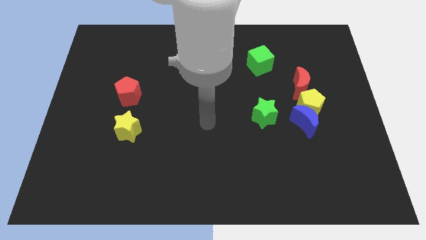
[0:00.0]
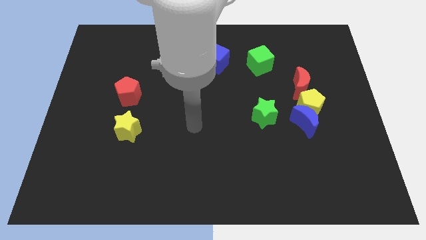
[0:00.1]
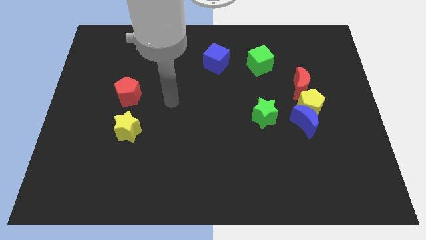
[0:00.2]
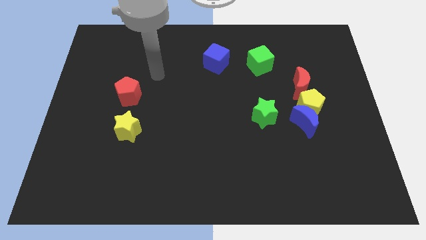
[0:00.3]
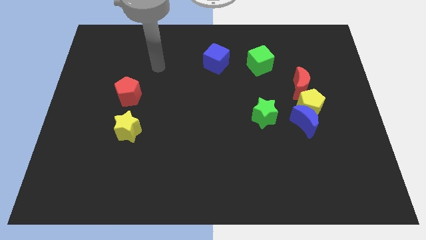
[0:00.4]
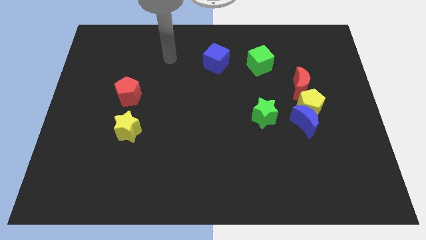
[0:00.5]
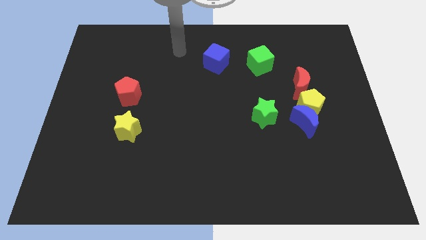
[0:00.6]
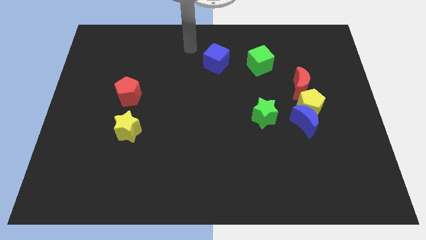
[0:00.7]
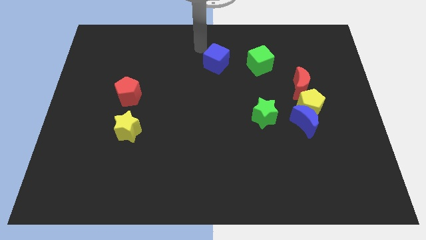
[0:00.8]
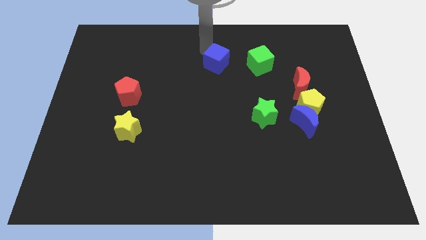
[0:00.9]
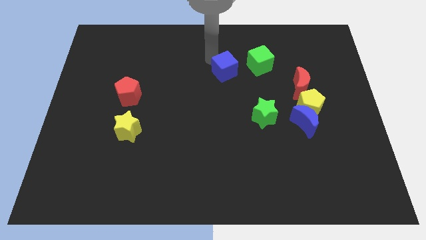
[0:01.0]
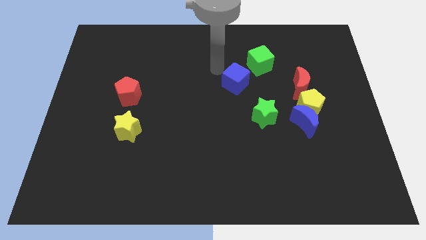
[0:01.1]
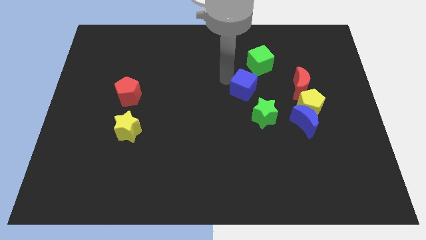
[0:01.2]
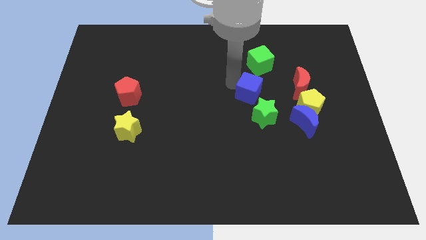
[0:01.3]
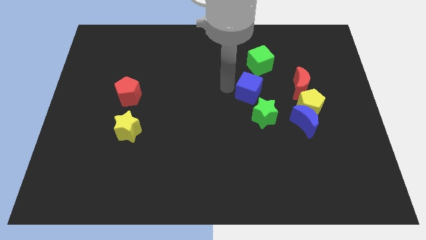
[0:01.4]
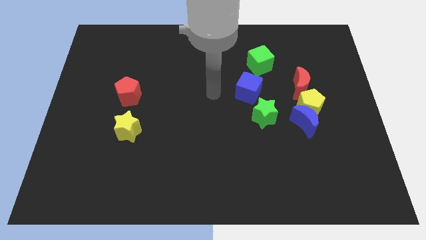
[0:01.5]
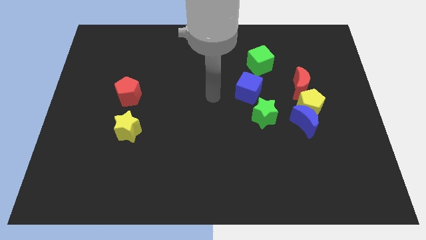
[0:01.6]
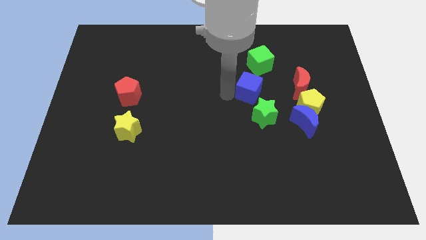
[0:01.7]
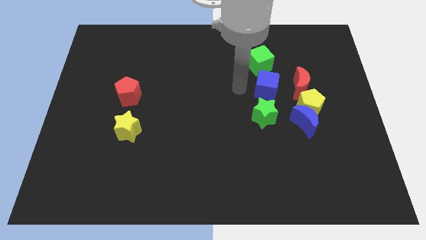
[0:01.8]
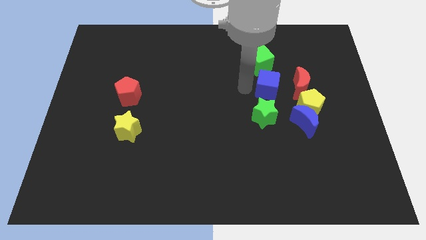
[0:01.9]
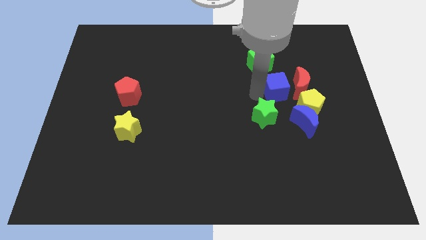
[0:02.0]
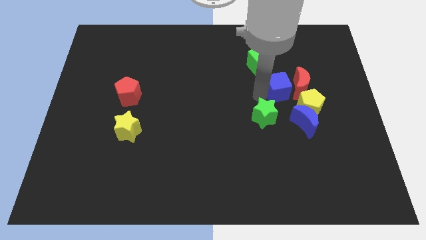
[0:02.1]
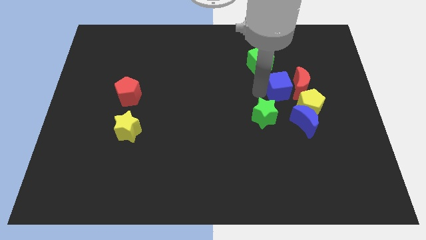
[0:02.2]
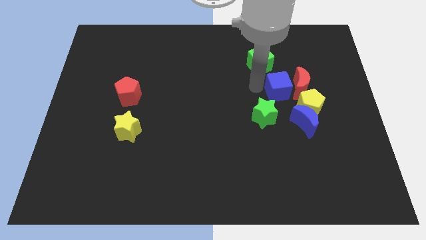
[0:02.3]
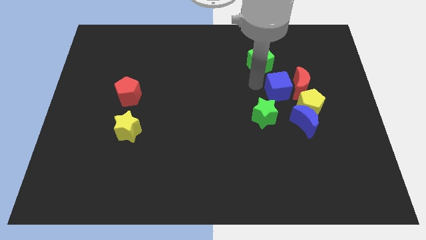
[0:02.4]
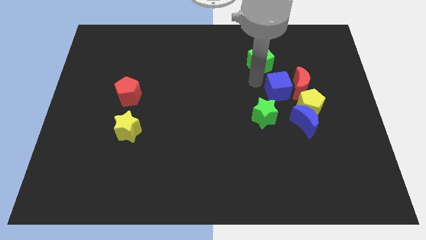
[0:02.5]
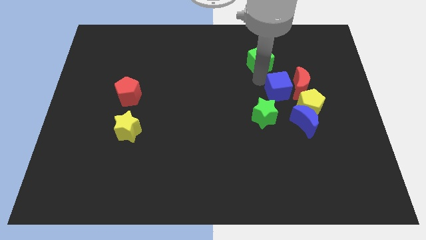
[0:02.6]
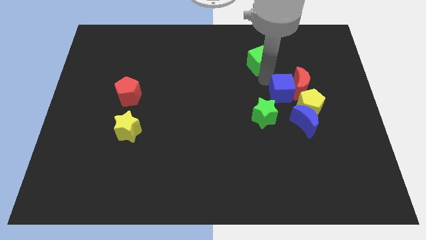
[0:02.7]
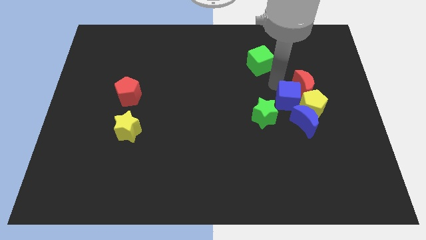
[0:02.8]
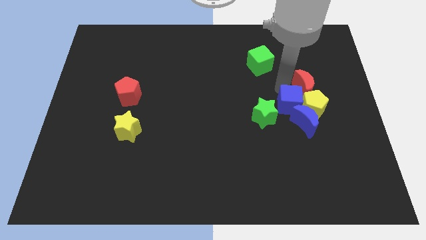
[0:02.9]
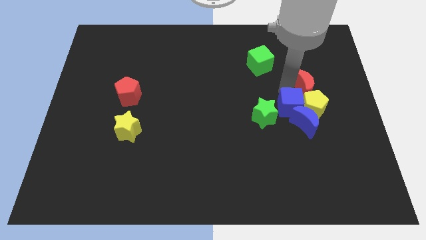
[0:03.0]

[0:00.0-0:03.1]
move the blue cube close to the yellow pentagon

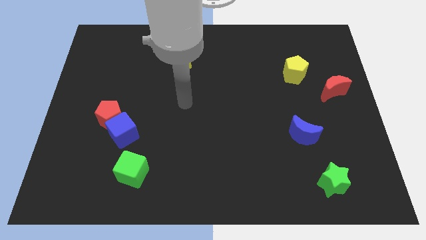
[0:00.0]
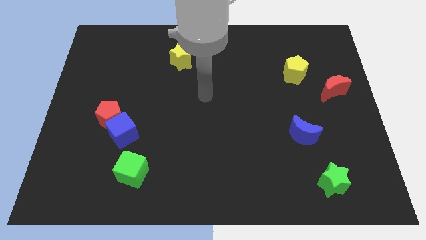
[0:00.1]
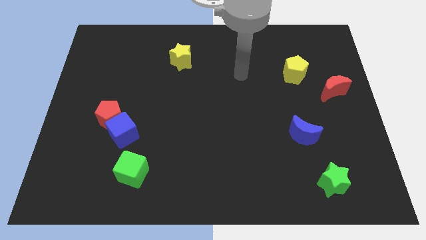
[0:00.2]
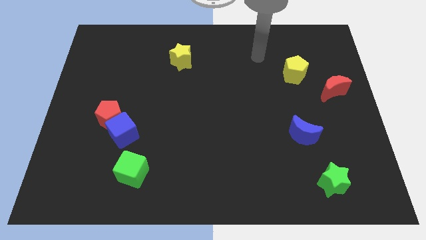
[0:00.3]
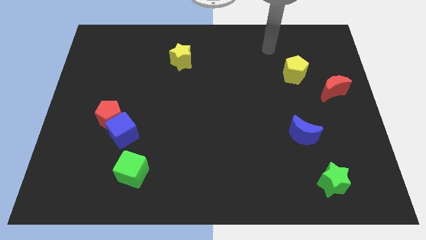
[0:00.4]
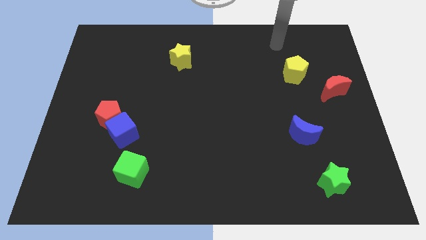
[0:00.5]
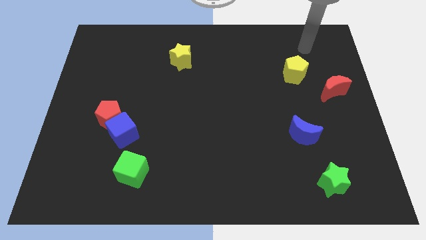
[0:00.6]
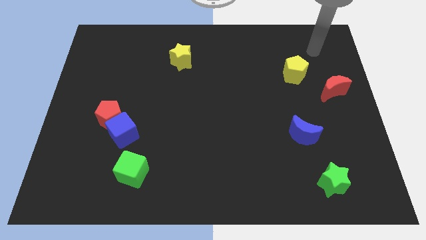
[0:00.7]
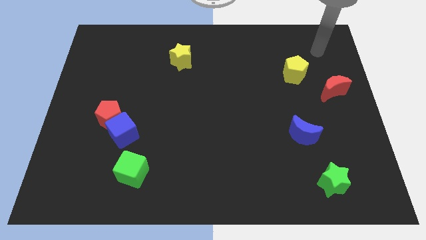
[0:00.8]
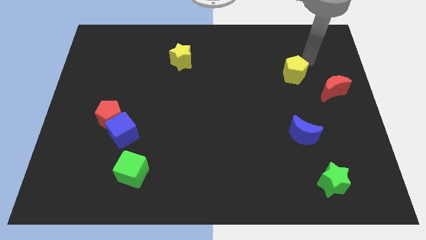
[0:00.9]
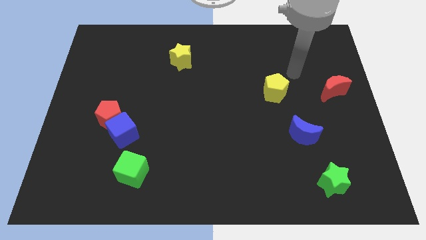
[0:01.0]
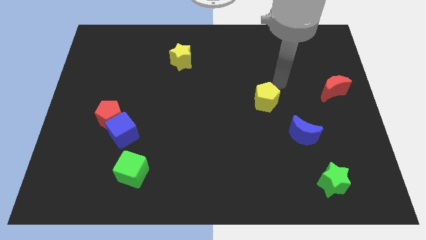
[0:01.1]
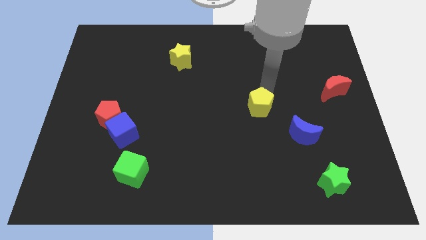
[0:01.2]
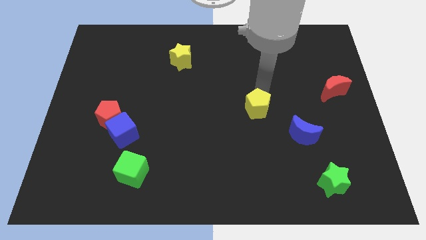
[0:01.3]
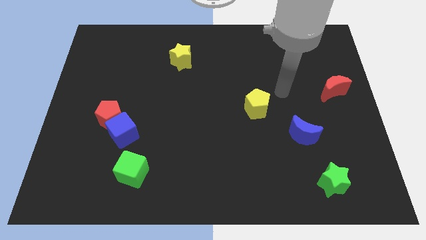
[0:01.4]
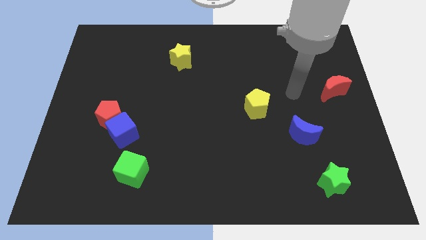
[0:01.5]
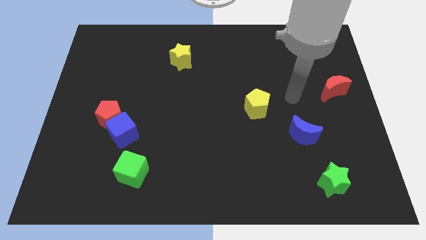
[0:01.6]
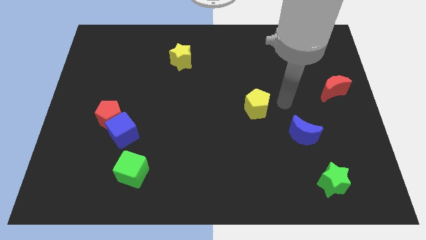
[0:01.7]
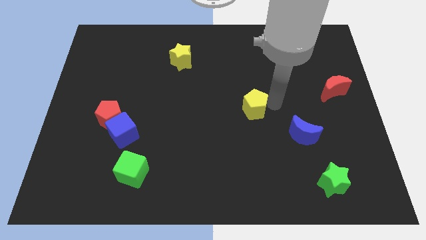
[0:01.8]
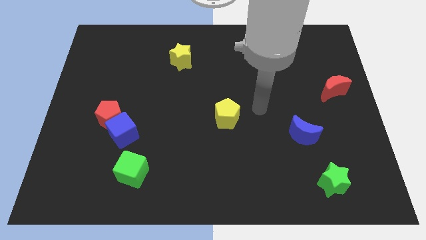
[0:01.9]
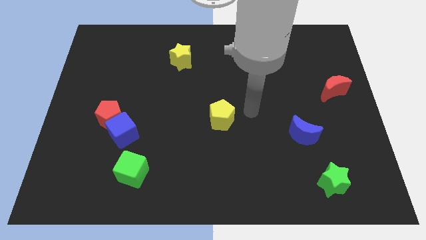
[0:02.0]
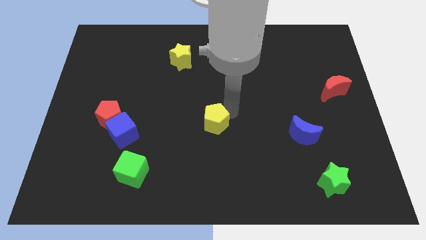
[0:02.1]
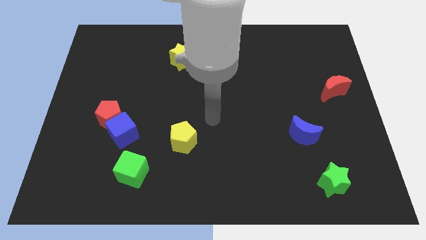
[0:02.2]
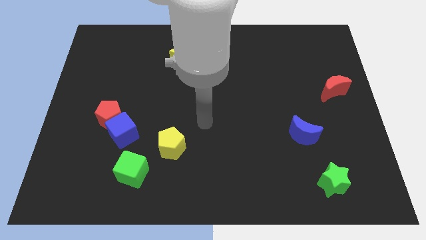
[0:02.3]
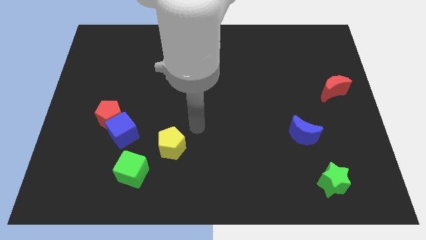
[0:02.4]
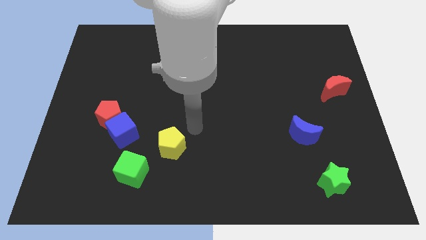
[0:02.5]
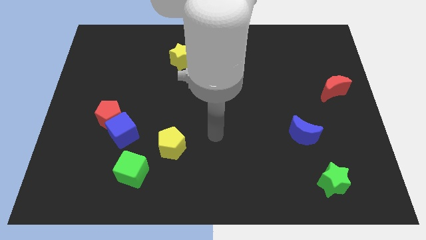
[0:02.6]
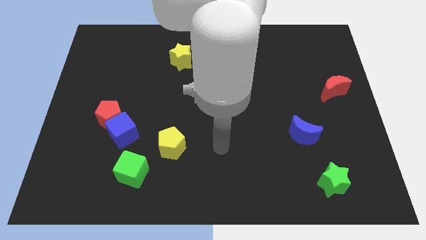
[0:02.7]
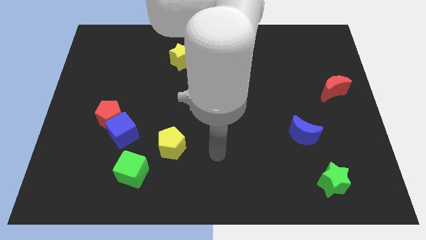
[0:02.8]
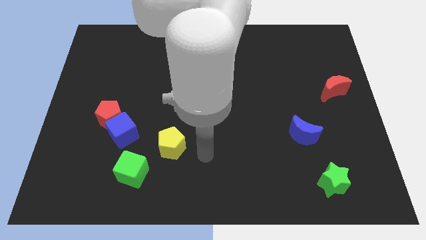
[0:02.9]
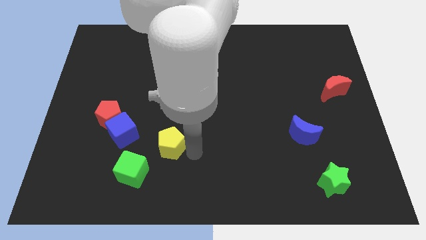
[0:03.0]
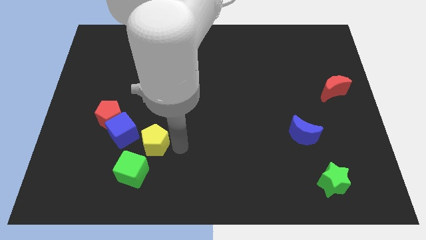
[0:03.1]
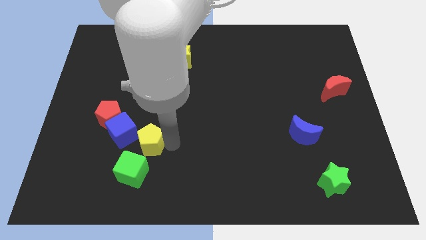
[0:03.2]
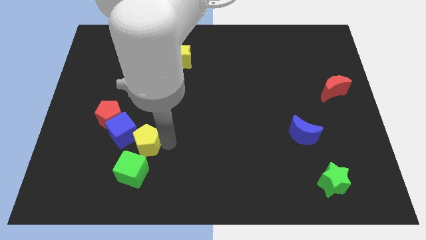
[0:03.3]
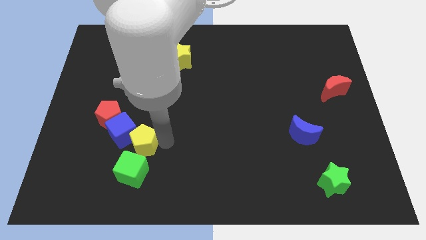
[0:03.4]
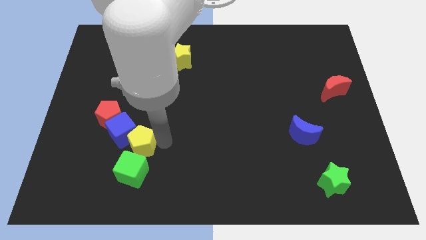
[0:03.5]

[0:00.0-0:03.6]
push the yellow pentagon next to the blue cube

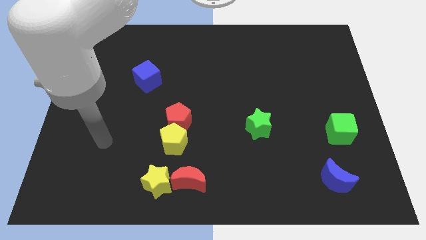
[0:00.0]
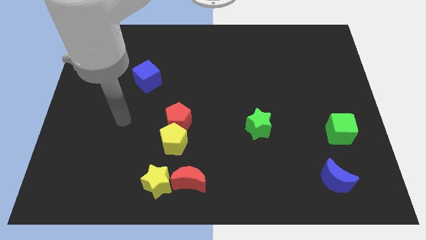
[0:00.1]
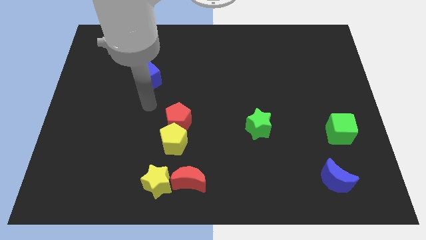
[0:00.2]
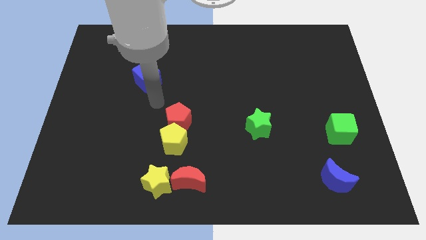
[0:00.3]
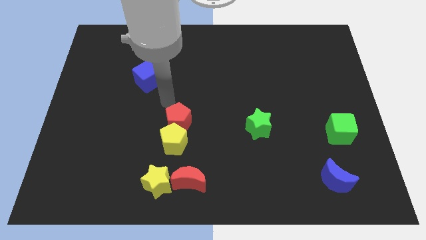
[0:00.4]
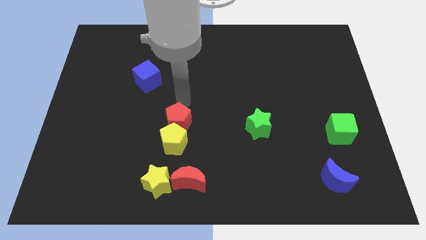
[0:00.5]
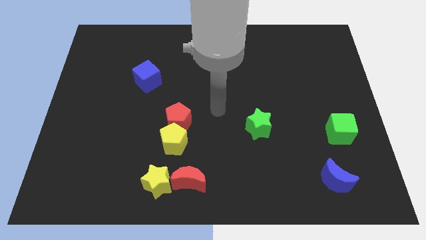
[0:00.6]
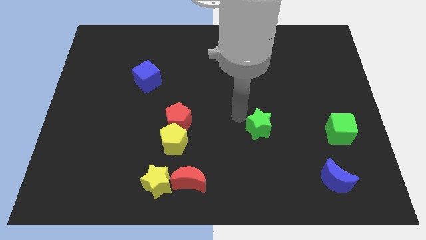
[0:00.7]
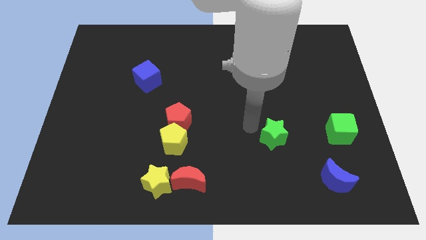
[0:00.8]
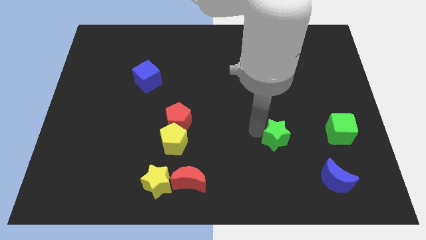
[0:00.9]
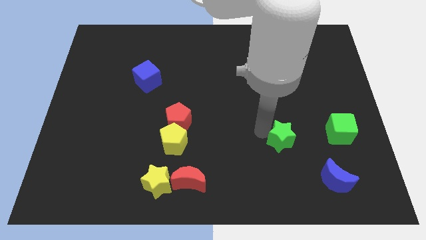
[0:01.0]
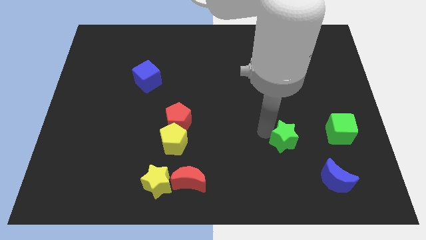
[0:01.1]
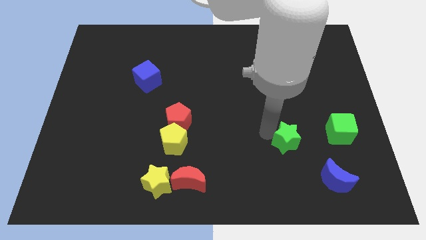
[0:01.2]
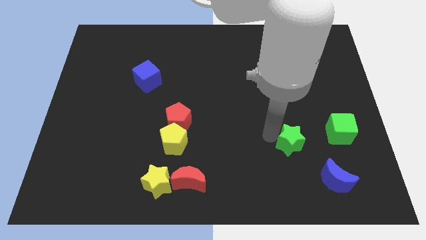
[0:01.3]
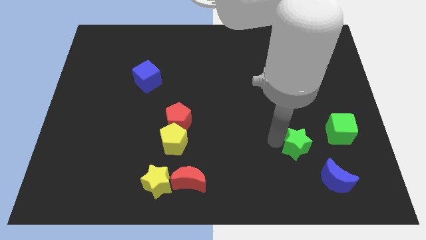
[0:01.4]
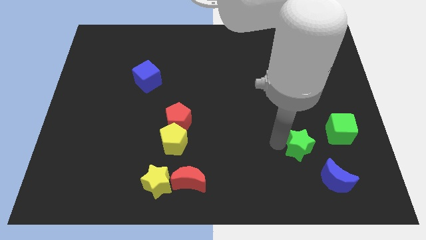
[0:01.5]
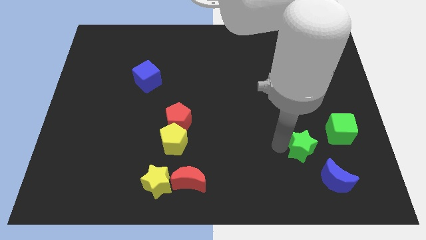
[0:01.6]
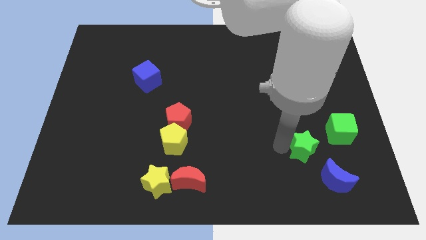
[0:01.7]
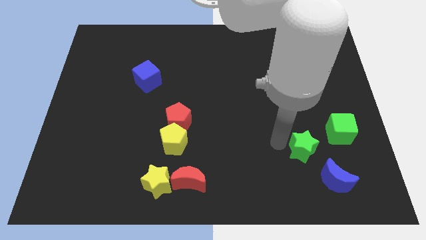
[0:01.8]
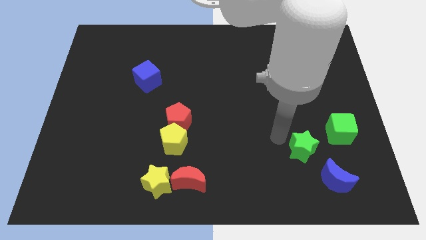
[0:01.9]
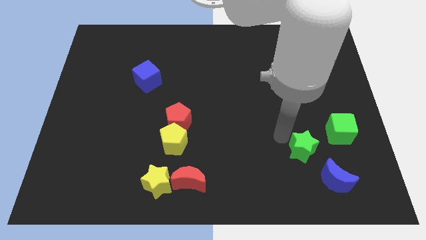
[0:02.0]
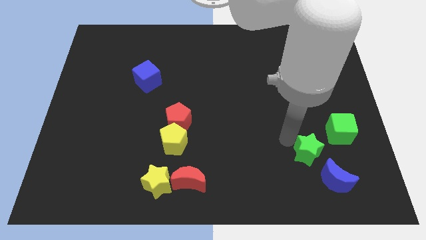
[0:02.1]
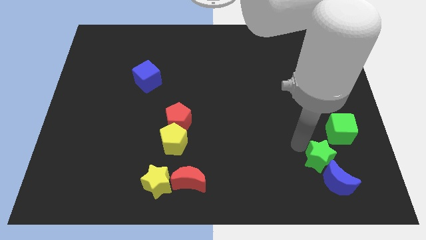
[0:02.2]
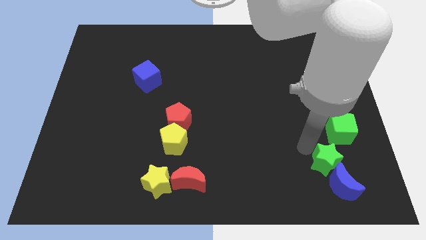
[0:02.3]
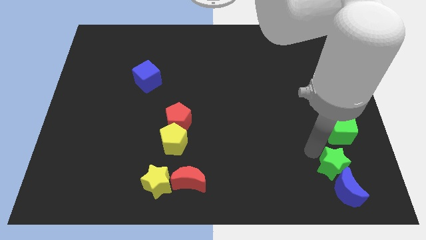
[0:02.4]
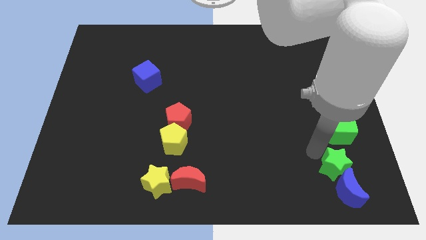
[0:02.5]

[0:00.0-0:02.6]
put the green star to the blue moon
